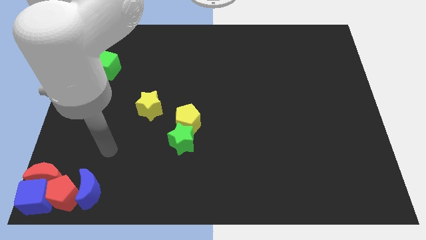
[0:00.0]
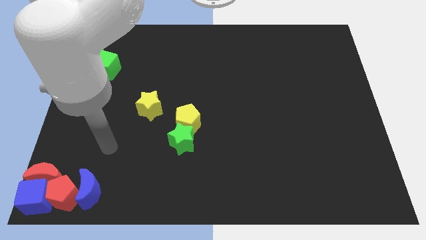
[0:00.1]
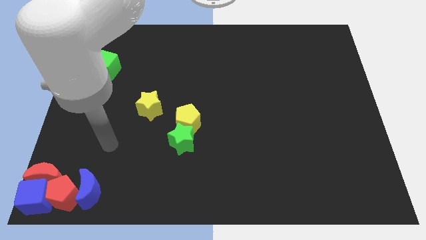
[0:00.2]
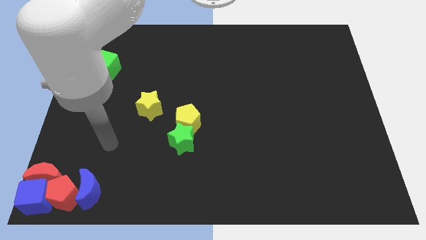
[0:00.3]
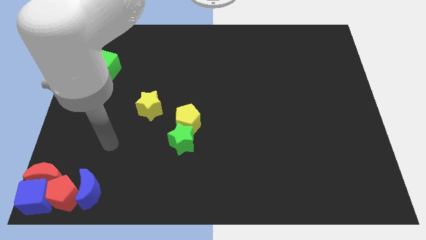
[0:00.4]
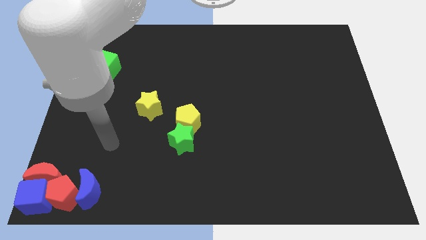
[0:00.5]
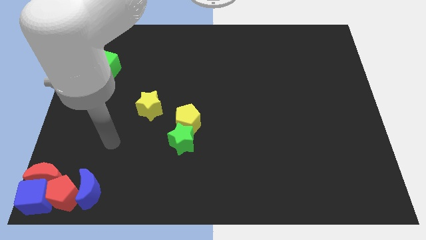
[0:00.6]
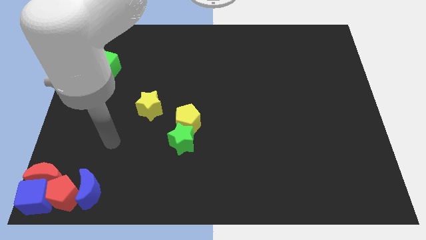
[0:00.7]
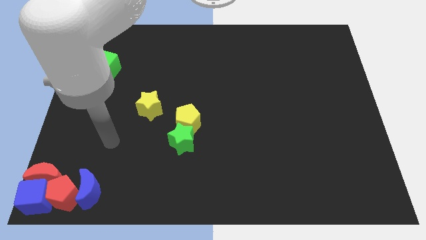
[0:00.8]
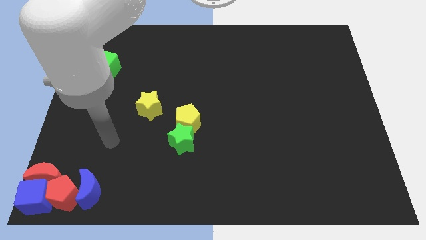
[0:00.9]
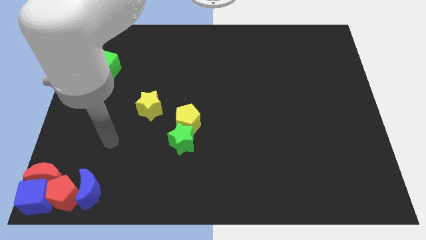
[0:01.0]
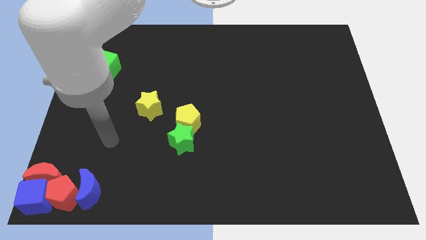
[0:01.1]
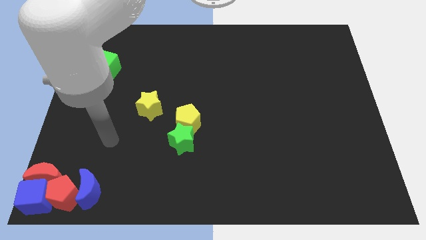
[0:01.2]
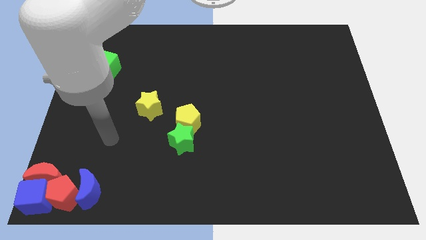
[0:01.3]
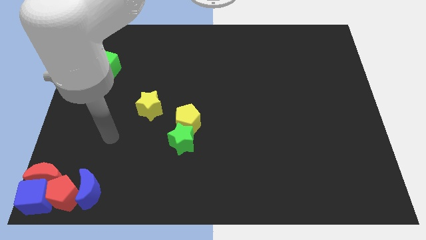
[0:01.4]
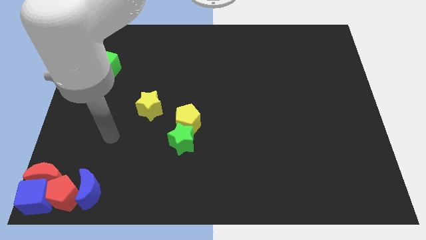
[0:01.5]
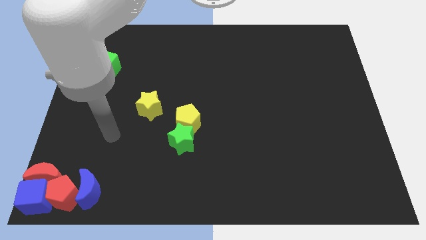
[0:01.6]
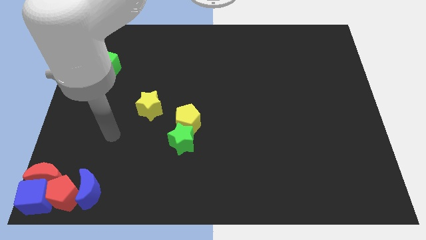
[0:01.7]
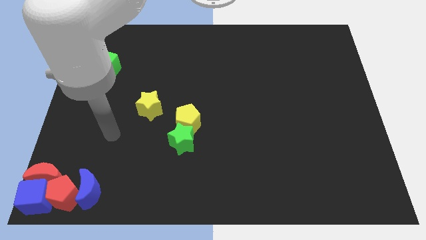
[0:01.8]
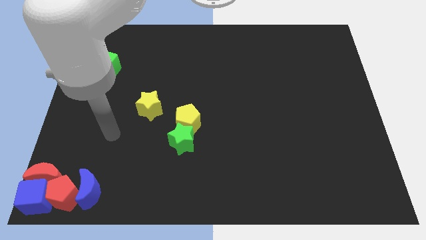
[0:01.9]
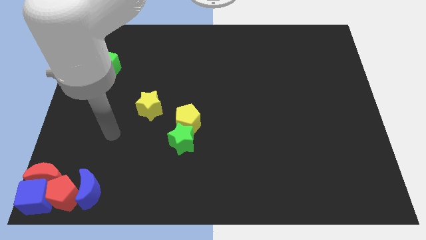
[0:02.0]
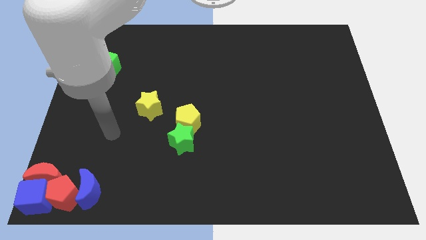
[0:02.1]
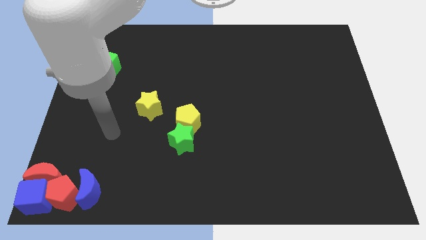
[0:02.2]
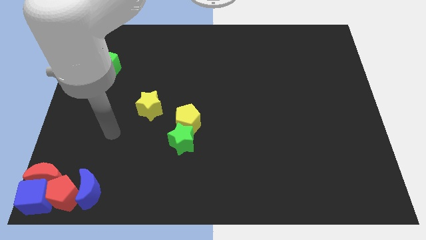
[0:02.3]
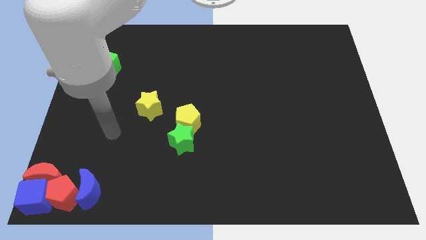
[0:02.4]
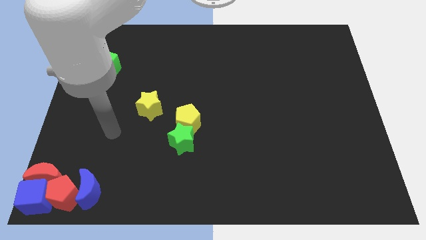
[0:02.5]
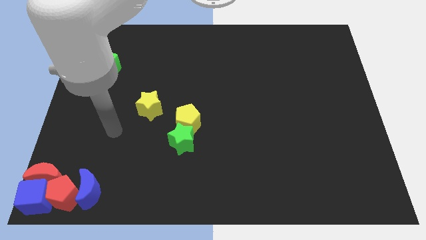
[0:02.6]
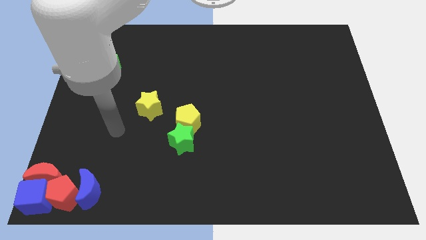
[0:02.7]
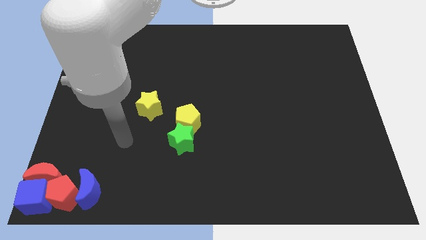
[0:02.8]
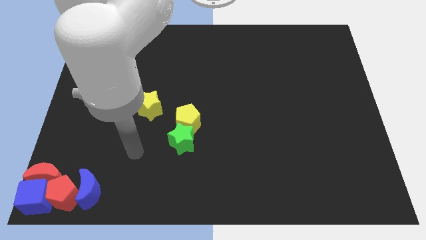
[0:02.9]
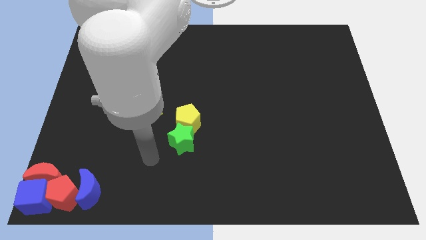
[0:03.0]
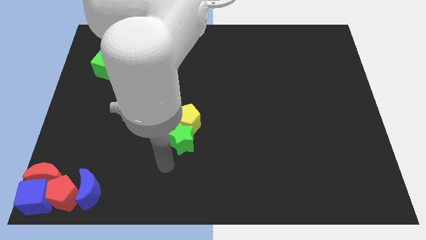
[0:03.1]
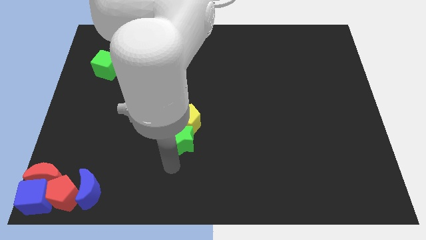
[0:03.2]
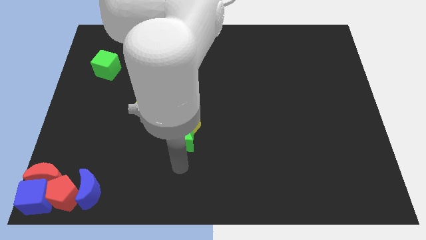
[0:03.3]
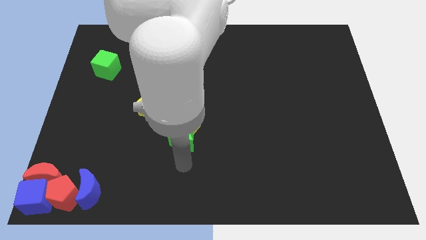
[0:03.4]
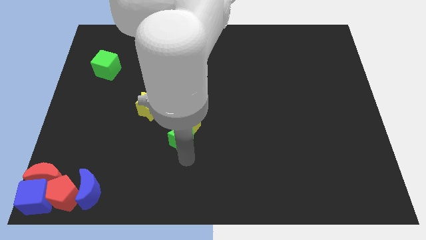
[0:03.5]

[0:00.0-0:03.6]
move the arm to the bottom of the green star

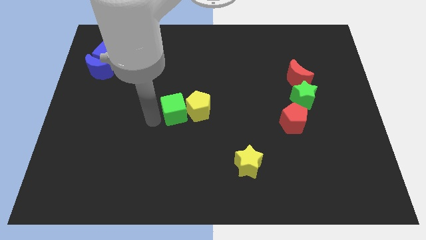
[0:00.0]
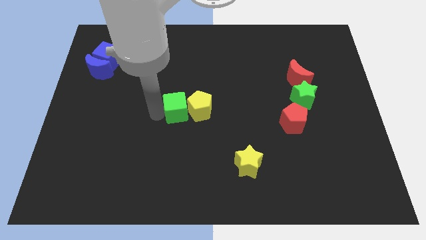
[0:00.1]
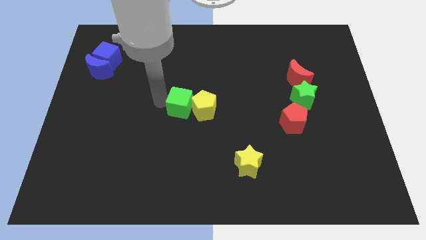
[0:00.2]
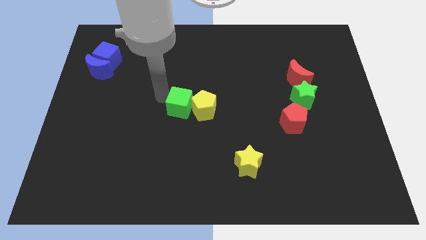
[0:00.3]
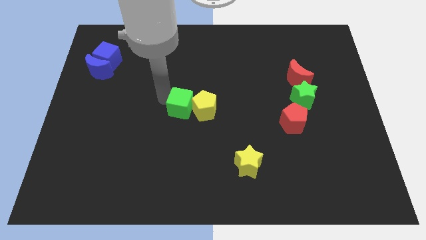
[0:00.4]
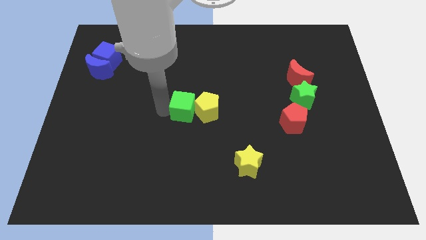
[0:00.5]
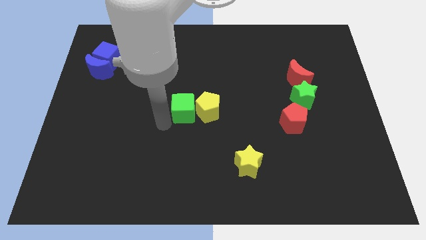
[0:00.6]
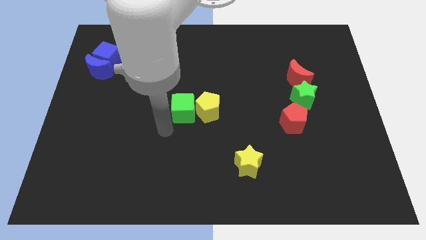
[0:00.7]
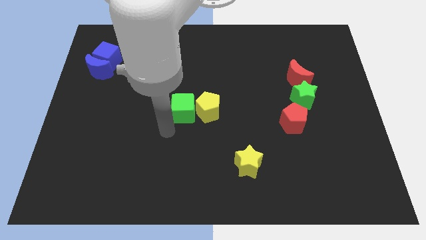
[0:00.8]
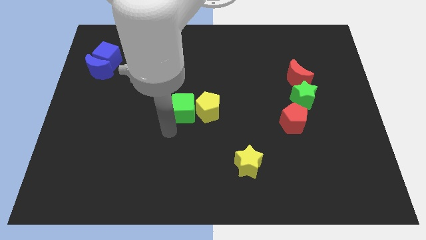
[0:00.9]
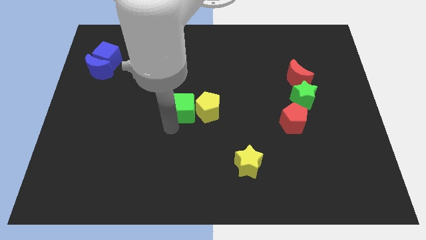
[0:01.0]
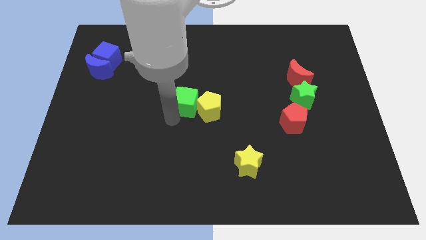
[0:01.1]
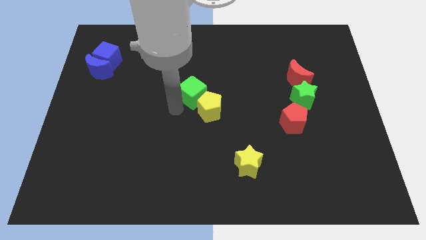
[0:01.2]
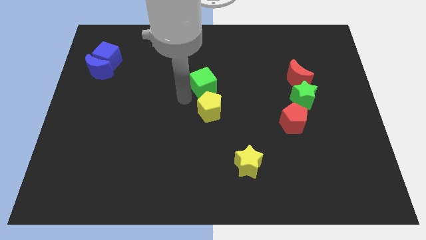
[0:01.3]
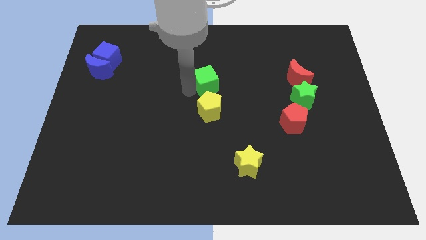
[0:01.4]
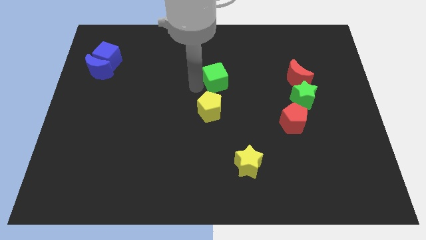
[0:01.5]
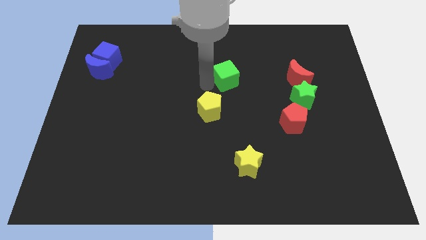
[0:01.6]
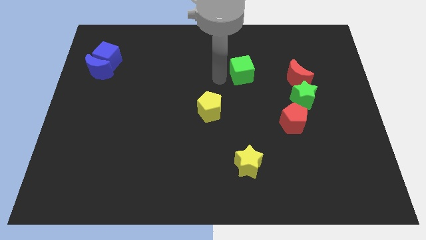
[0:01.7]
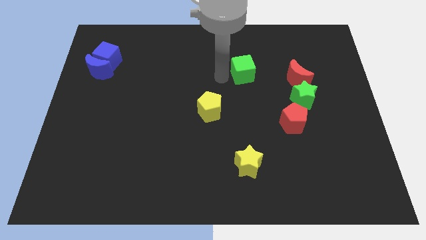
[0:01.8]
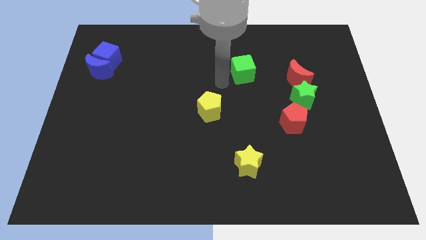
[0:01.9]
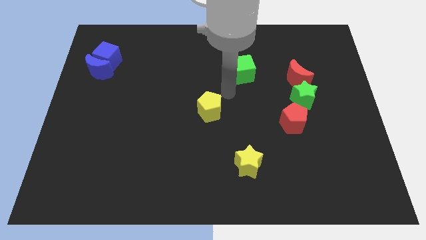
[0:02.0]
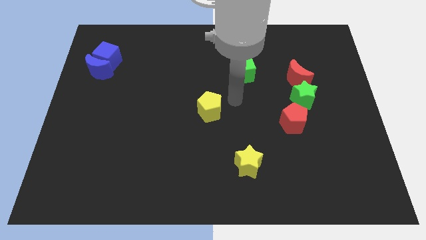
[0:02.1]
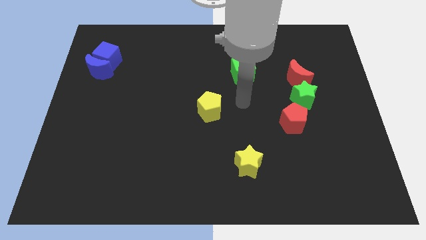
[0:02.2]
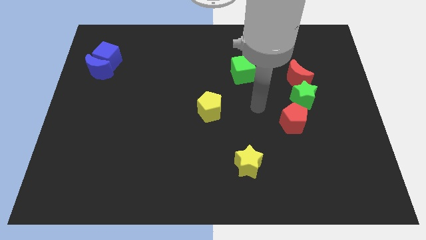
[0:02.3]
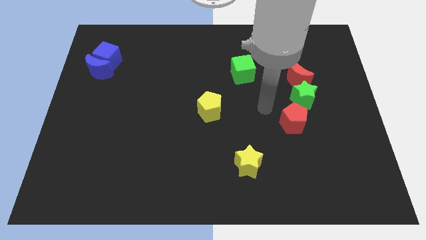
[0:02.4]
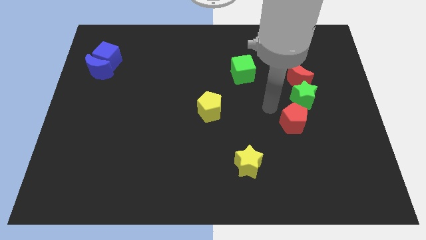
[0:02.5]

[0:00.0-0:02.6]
push the green cube diagonal to the left of the red crescent

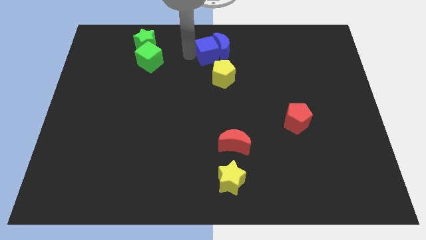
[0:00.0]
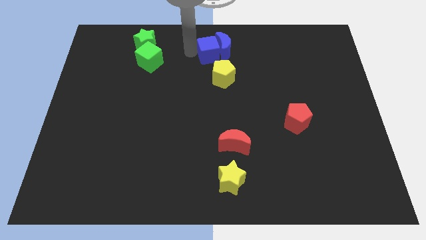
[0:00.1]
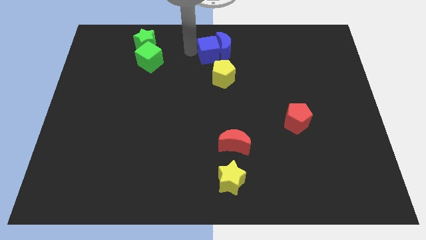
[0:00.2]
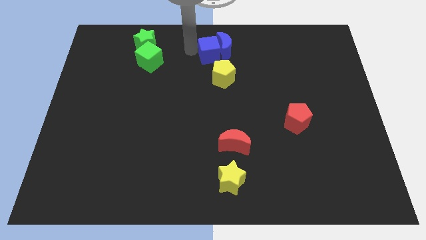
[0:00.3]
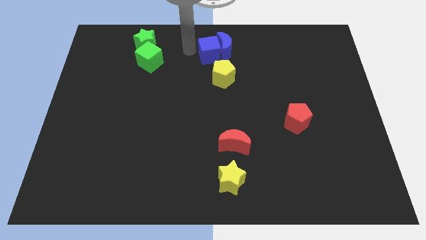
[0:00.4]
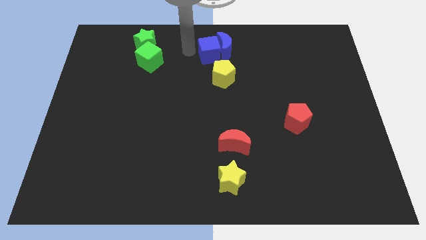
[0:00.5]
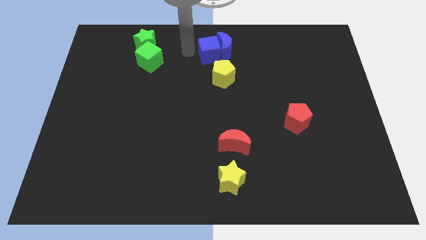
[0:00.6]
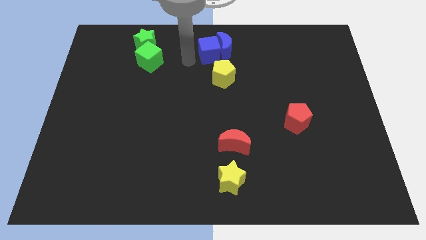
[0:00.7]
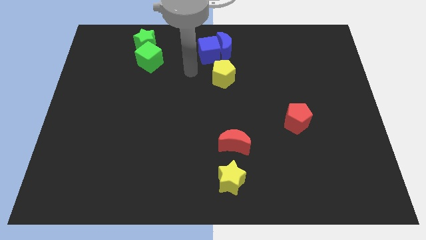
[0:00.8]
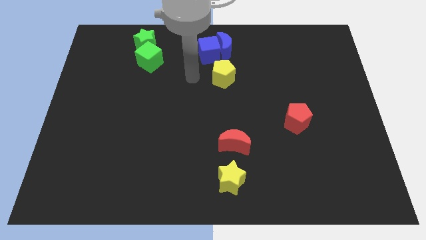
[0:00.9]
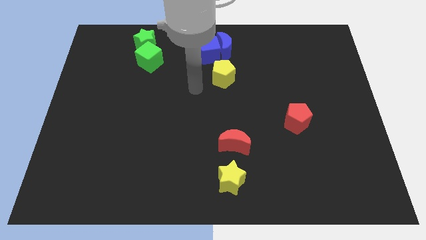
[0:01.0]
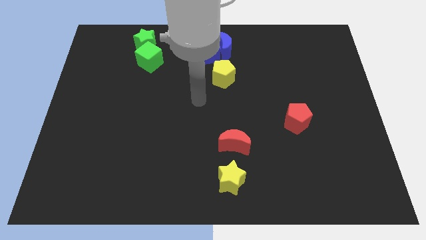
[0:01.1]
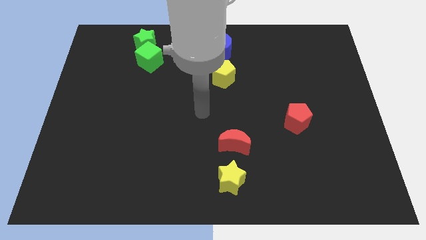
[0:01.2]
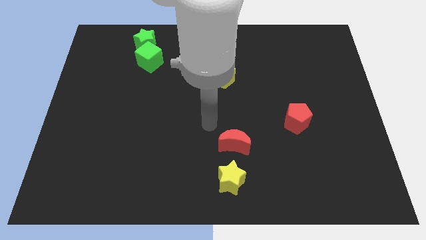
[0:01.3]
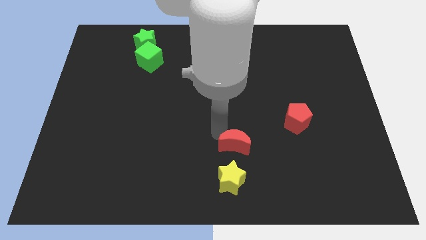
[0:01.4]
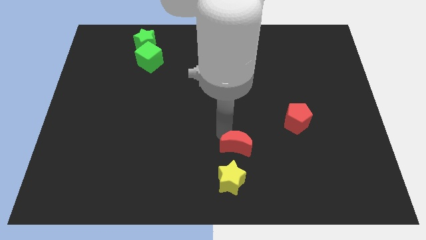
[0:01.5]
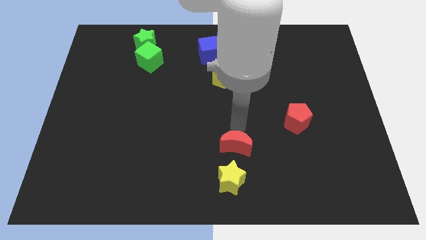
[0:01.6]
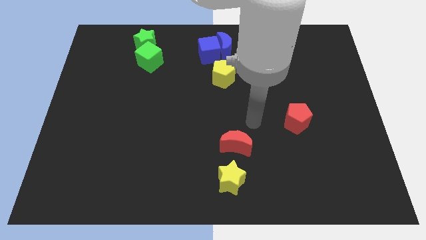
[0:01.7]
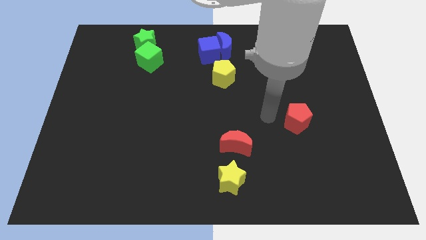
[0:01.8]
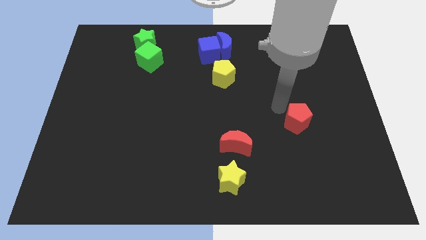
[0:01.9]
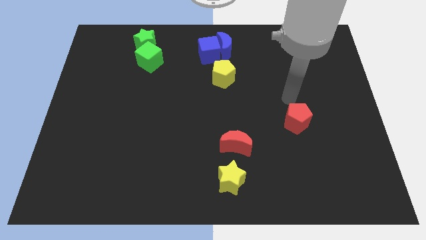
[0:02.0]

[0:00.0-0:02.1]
slide the red moon

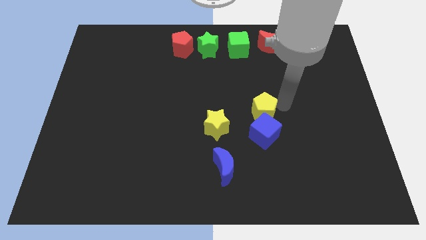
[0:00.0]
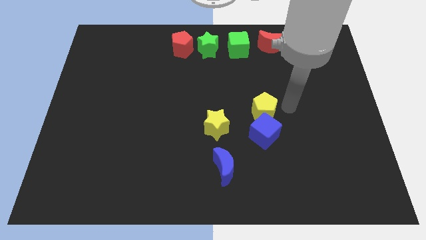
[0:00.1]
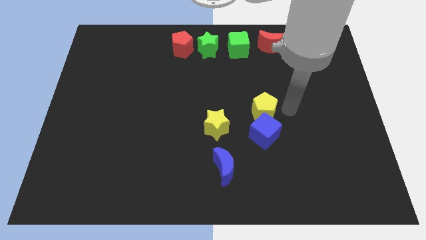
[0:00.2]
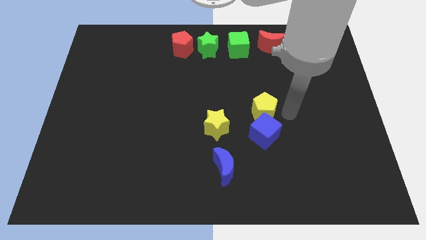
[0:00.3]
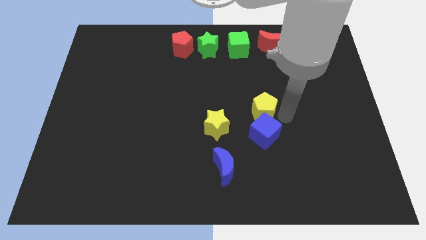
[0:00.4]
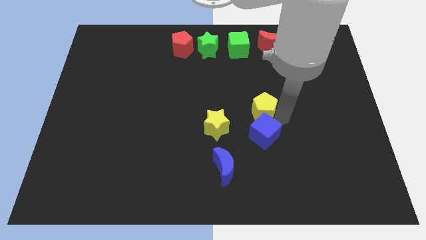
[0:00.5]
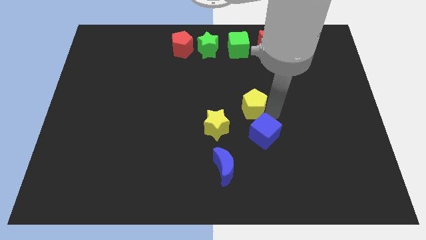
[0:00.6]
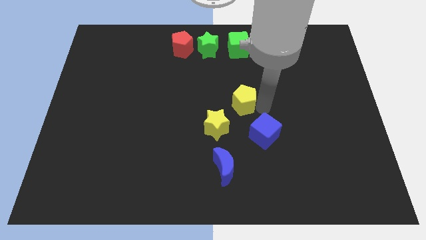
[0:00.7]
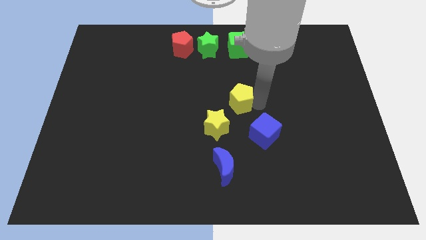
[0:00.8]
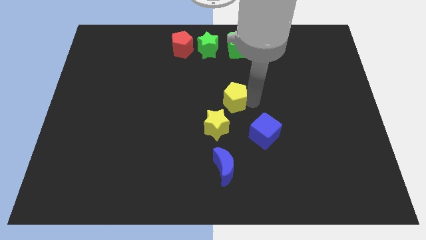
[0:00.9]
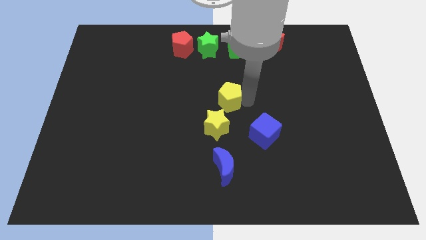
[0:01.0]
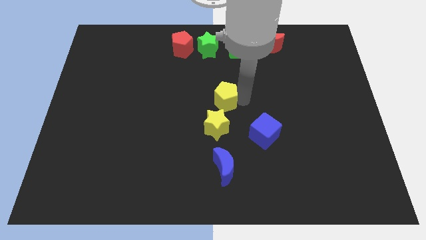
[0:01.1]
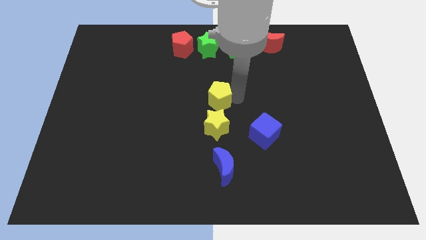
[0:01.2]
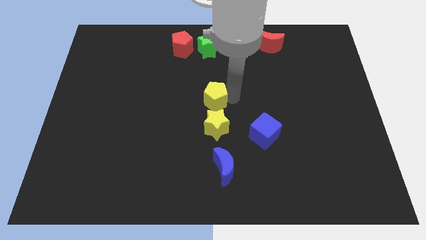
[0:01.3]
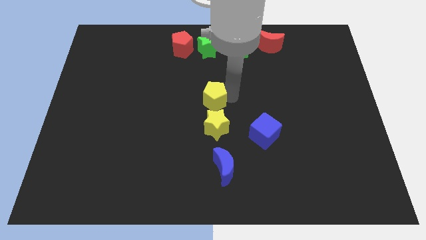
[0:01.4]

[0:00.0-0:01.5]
move the yellow pentagon to the center
